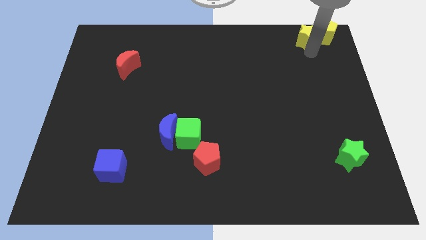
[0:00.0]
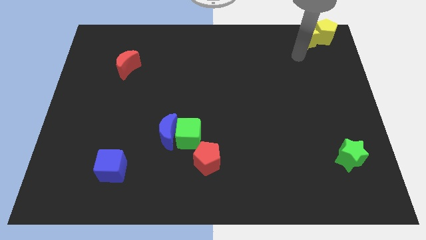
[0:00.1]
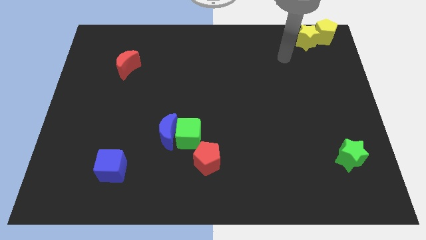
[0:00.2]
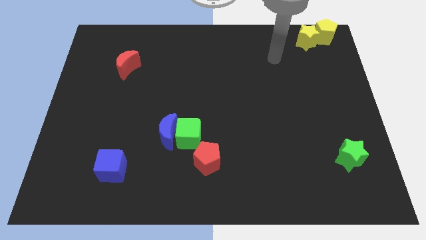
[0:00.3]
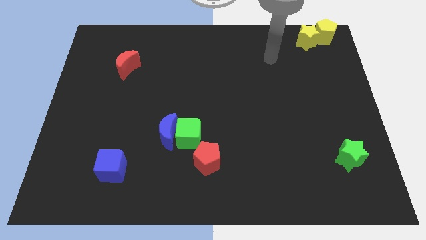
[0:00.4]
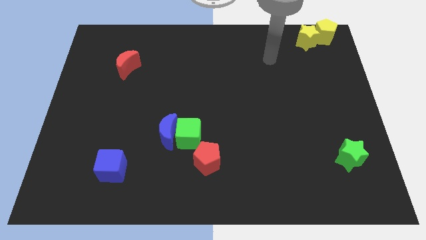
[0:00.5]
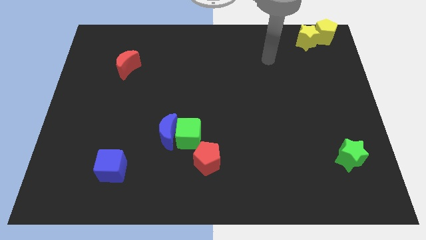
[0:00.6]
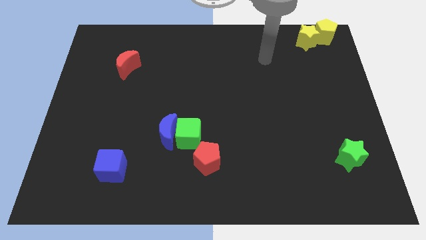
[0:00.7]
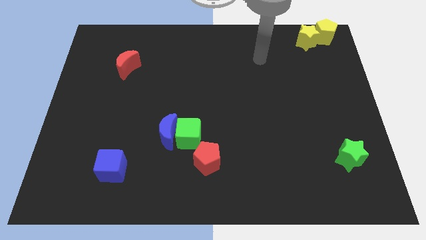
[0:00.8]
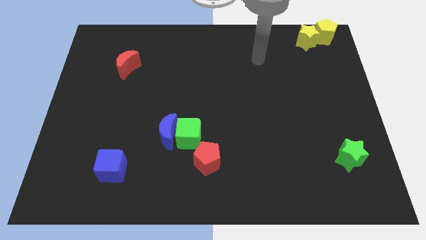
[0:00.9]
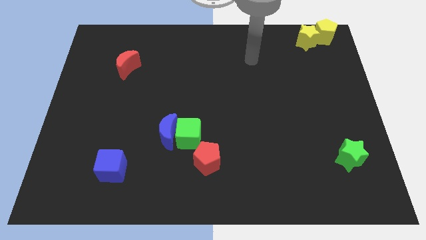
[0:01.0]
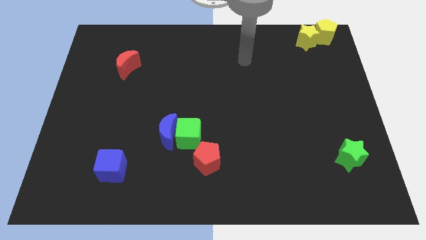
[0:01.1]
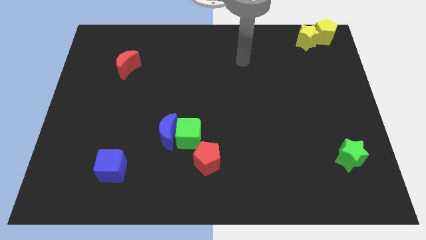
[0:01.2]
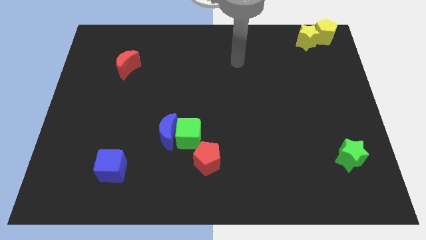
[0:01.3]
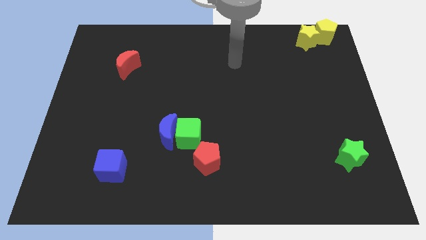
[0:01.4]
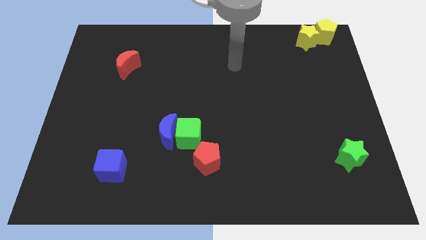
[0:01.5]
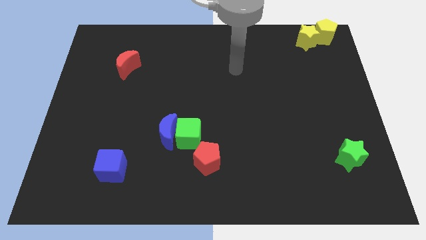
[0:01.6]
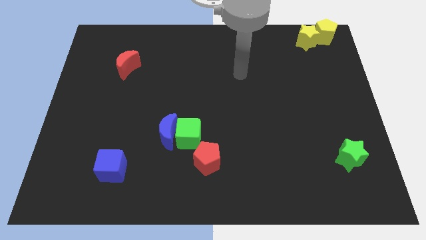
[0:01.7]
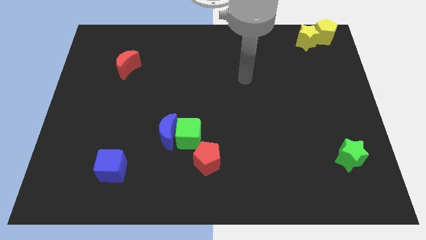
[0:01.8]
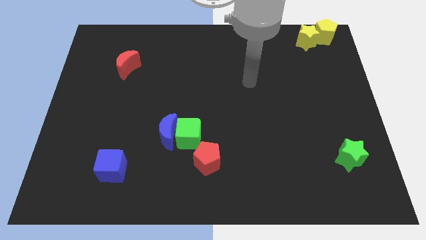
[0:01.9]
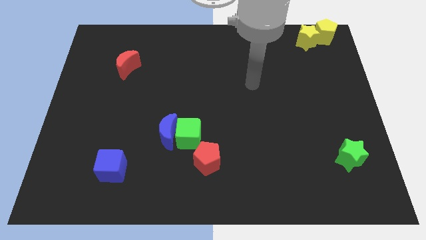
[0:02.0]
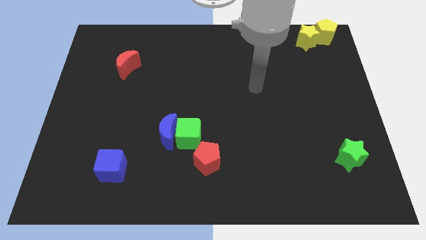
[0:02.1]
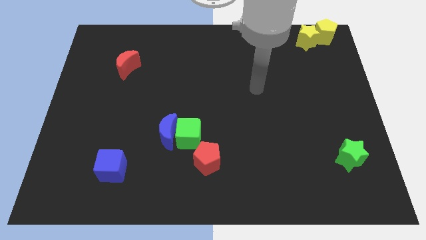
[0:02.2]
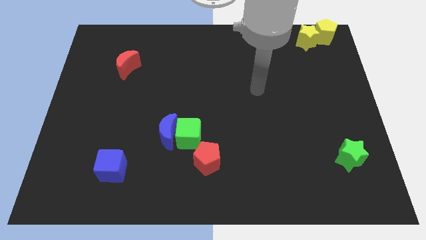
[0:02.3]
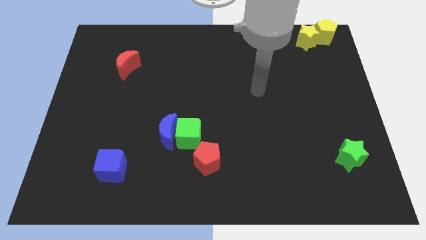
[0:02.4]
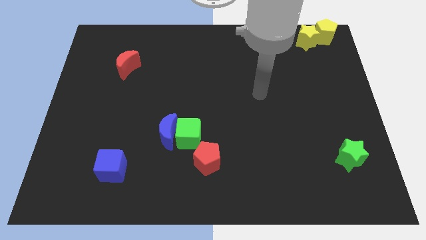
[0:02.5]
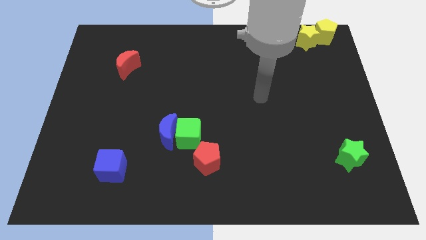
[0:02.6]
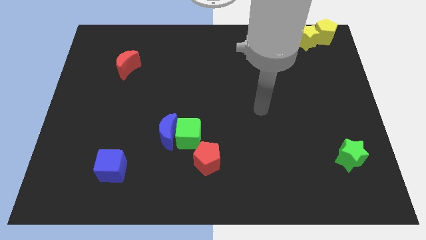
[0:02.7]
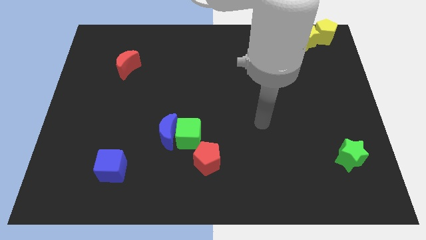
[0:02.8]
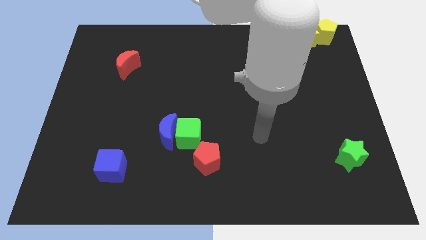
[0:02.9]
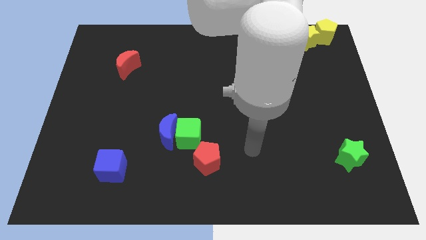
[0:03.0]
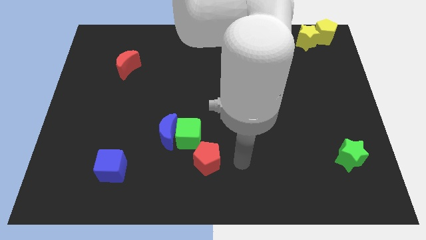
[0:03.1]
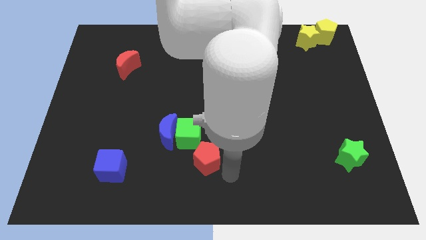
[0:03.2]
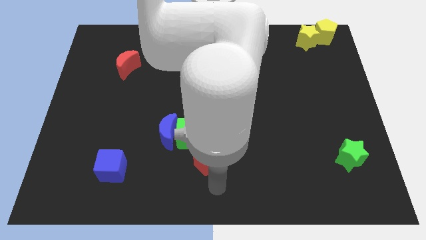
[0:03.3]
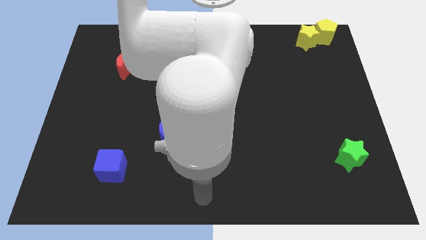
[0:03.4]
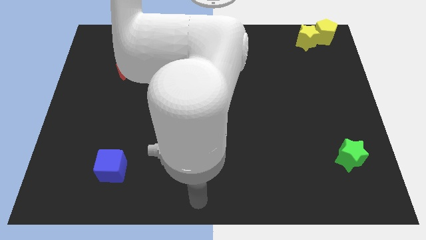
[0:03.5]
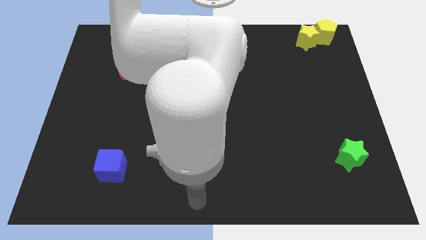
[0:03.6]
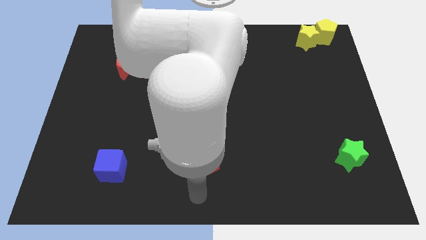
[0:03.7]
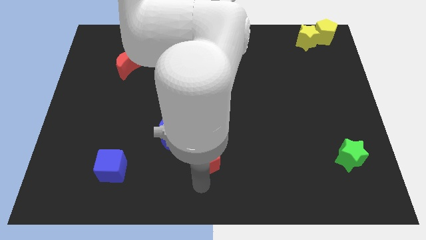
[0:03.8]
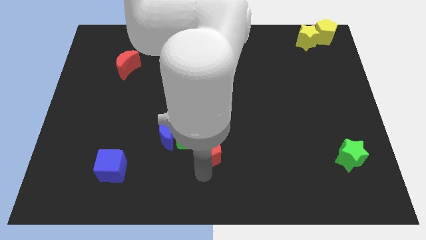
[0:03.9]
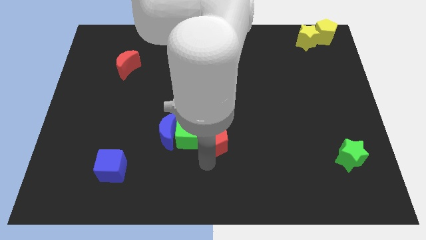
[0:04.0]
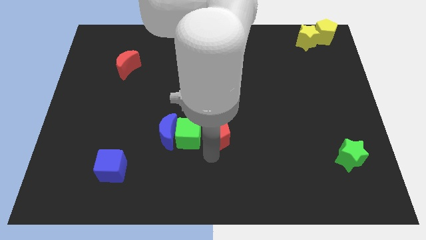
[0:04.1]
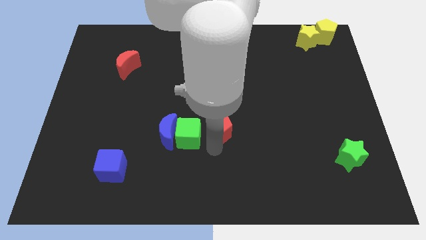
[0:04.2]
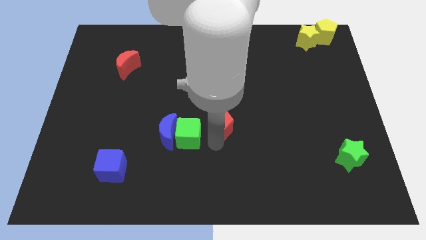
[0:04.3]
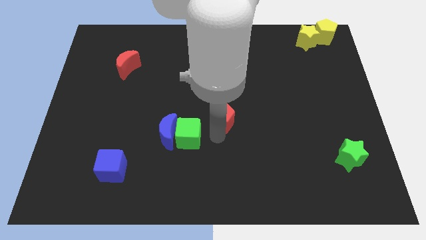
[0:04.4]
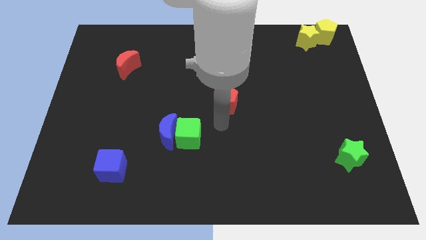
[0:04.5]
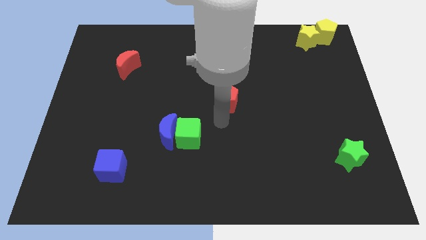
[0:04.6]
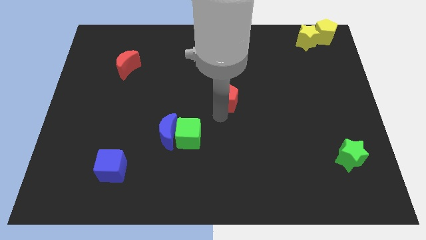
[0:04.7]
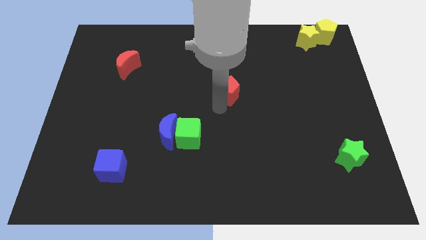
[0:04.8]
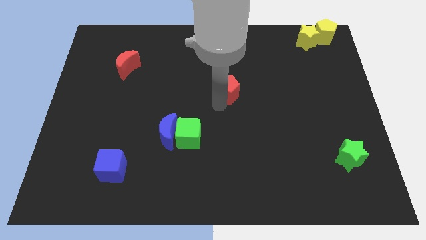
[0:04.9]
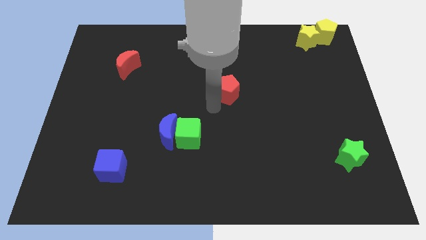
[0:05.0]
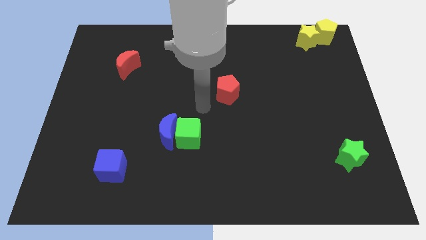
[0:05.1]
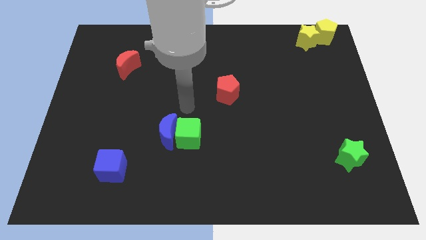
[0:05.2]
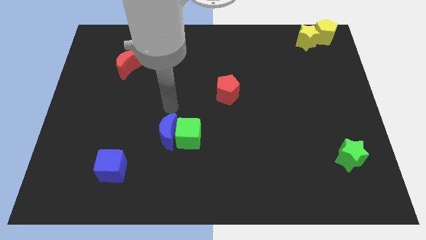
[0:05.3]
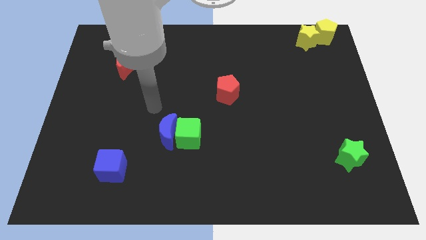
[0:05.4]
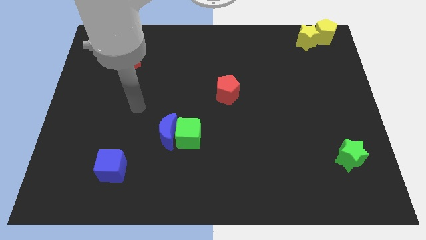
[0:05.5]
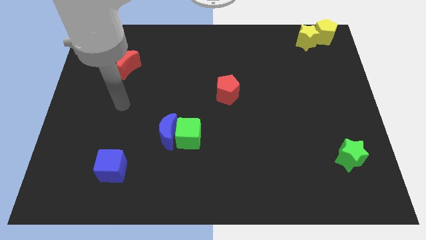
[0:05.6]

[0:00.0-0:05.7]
place the red pentagon in between red crescent and green star

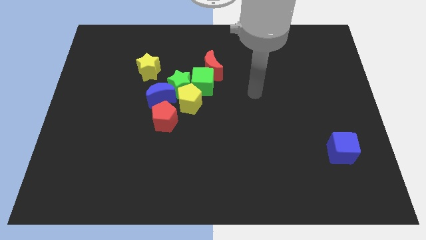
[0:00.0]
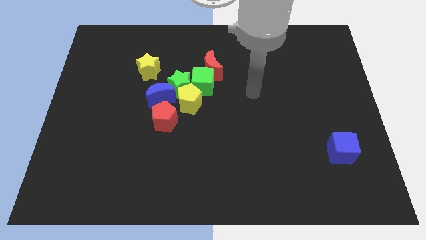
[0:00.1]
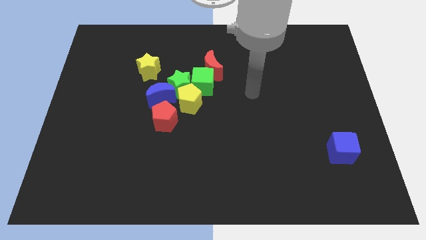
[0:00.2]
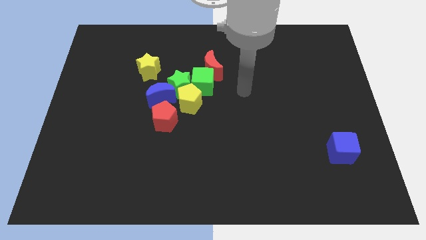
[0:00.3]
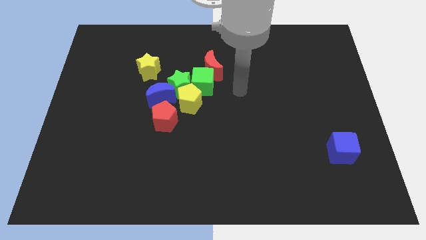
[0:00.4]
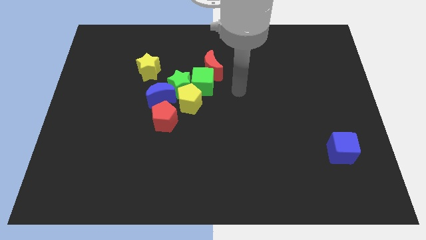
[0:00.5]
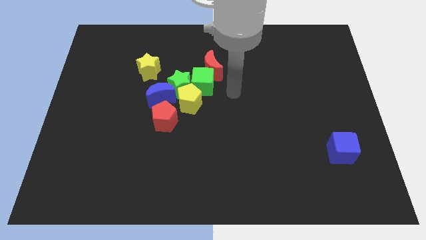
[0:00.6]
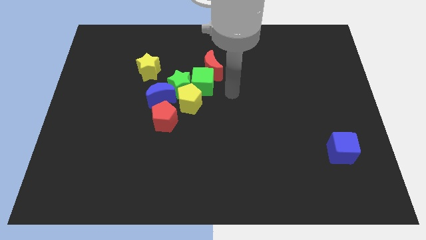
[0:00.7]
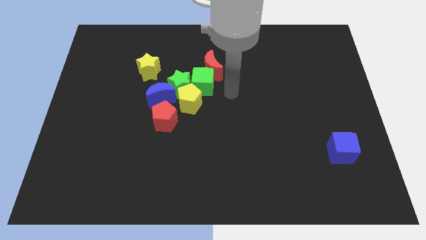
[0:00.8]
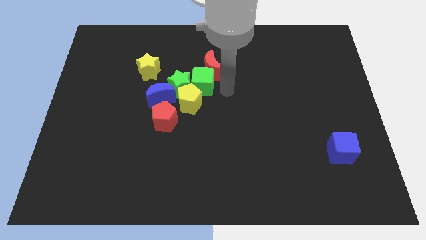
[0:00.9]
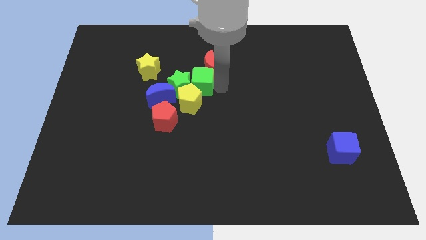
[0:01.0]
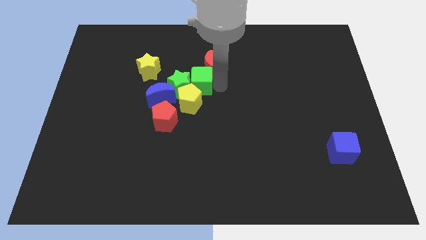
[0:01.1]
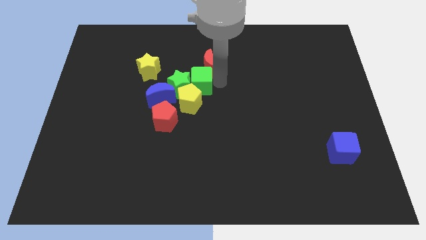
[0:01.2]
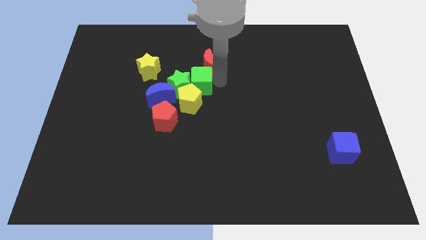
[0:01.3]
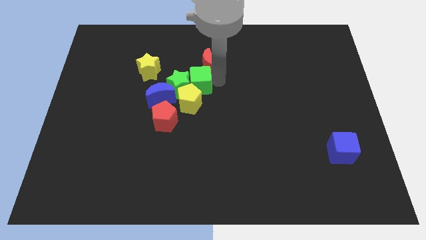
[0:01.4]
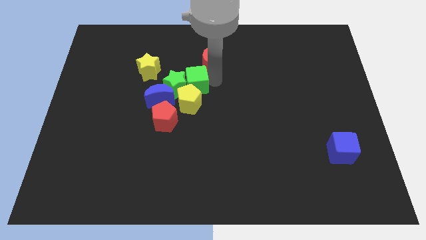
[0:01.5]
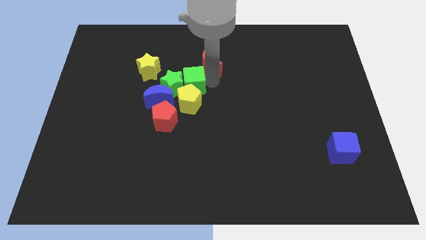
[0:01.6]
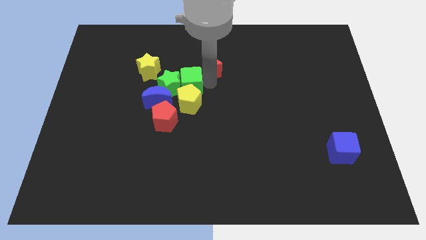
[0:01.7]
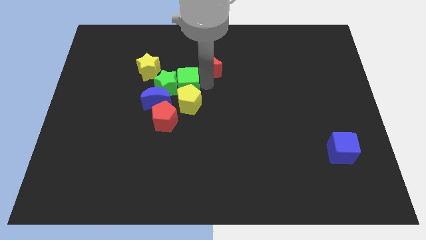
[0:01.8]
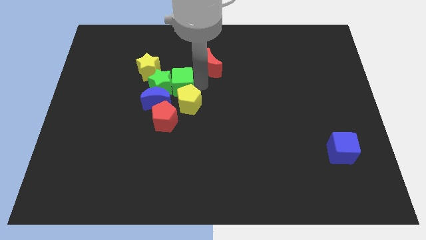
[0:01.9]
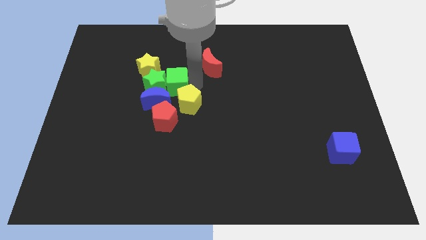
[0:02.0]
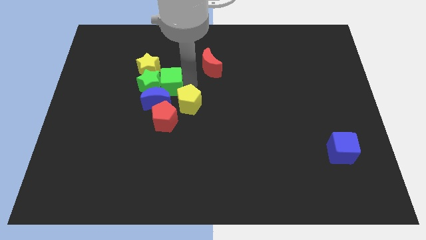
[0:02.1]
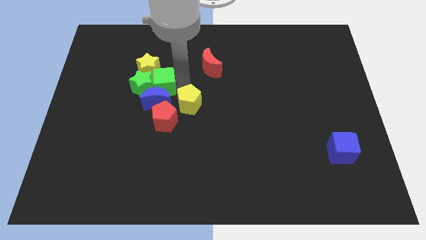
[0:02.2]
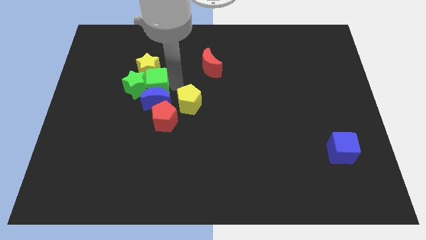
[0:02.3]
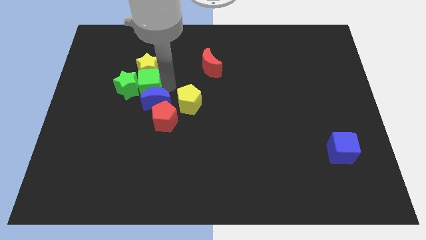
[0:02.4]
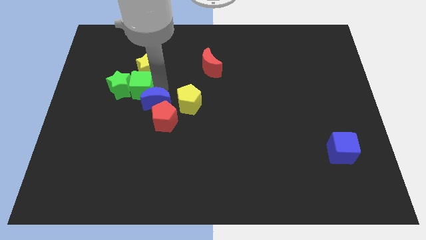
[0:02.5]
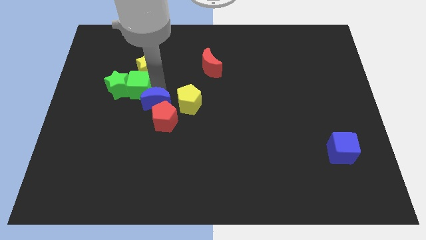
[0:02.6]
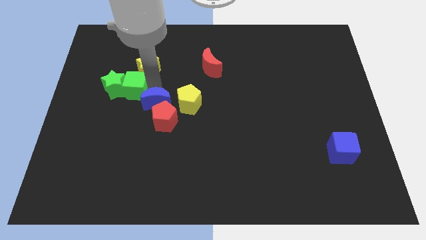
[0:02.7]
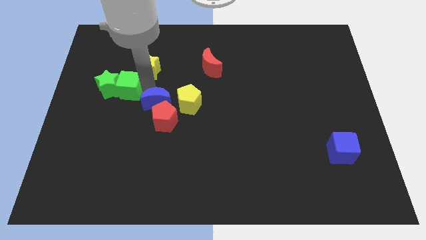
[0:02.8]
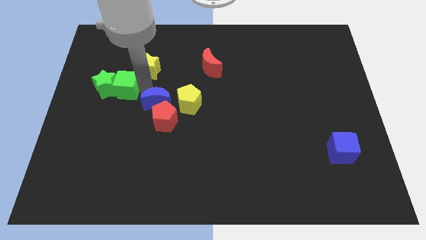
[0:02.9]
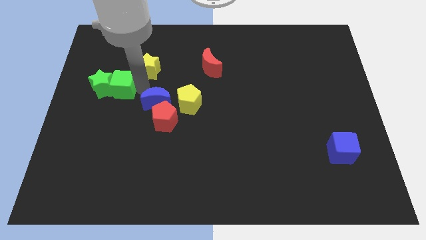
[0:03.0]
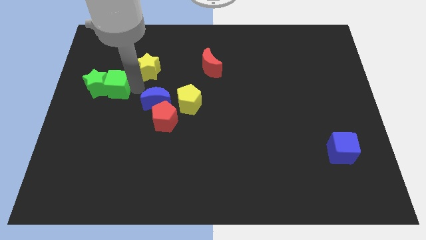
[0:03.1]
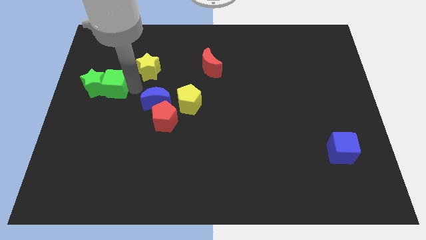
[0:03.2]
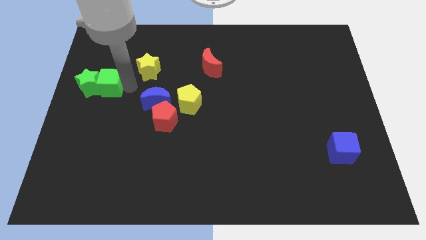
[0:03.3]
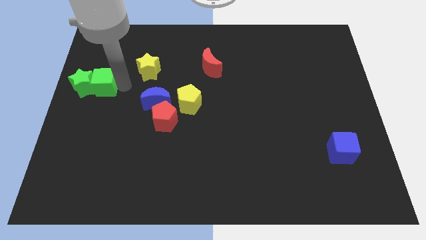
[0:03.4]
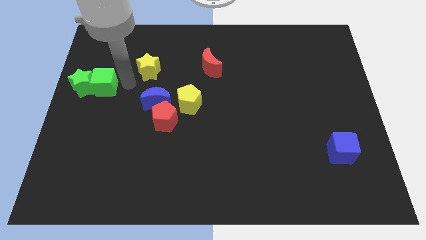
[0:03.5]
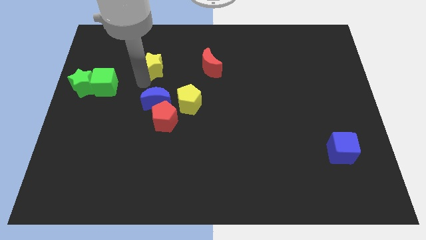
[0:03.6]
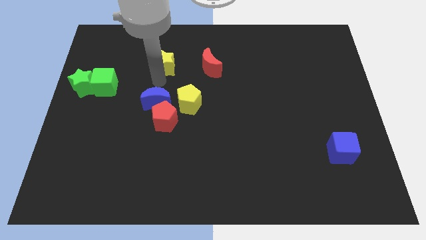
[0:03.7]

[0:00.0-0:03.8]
move green star and green cube to the left
